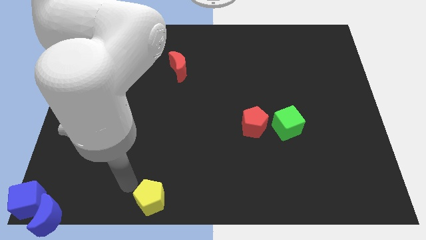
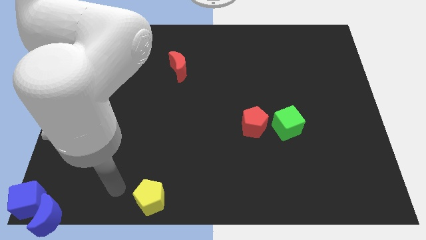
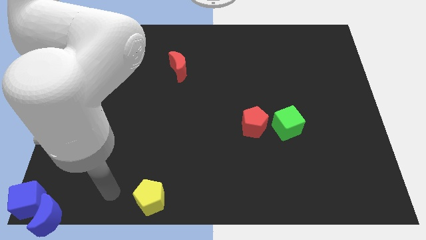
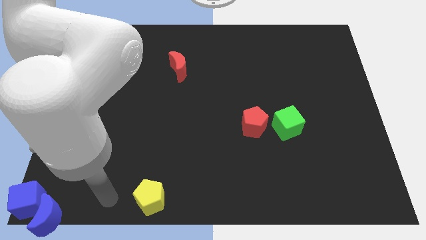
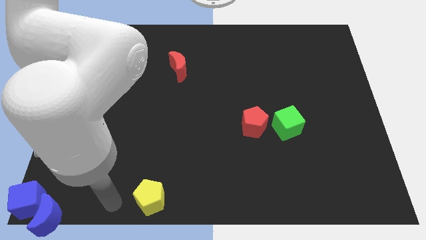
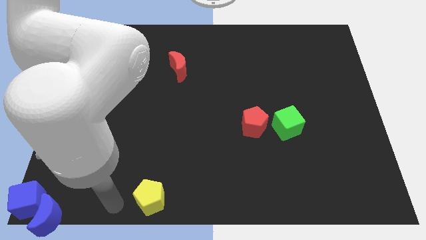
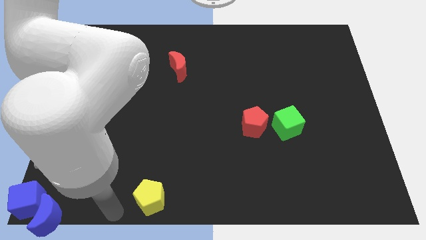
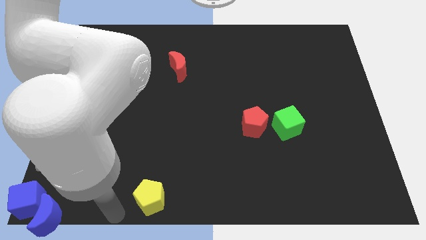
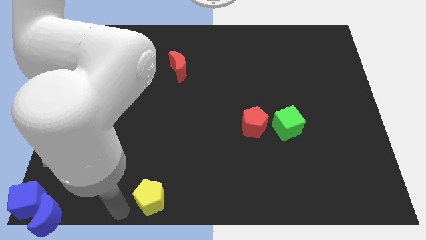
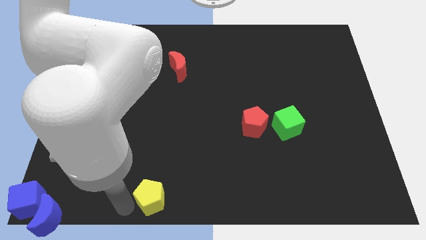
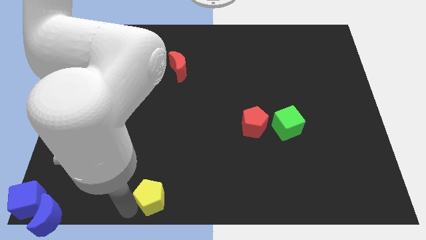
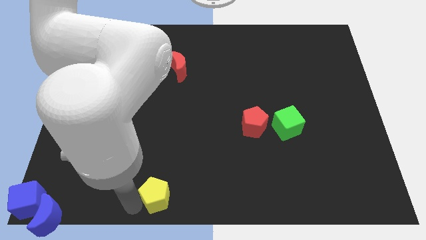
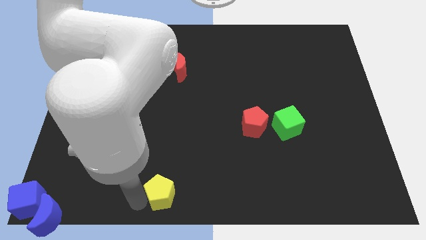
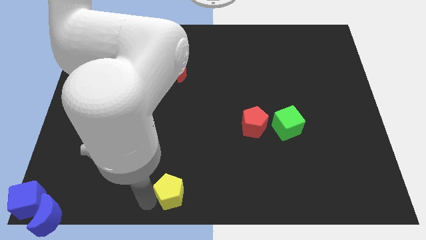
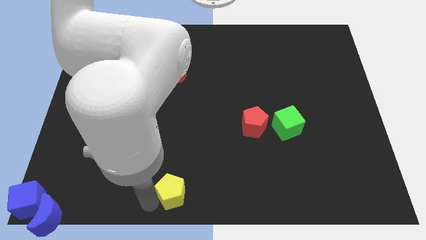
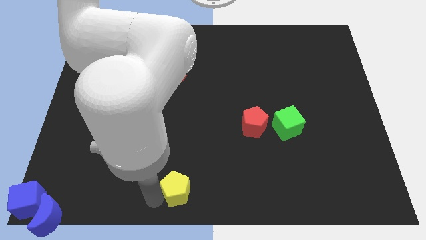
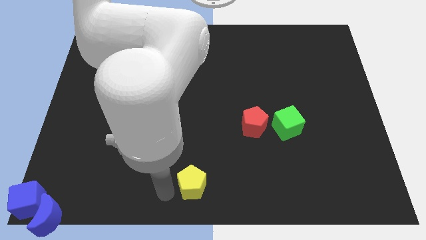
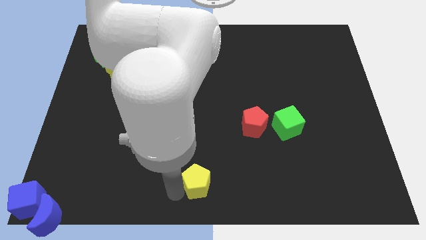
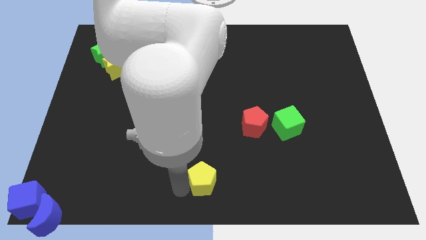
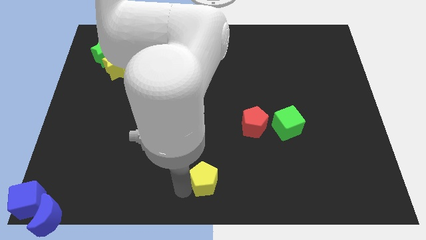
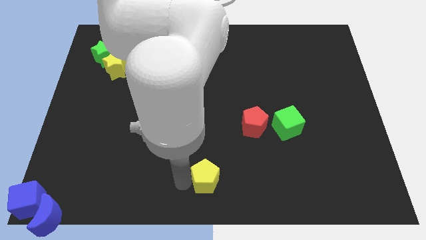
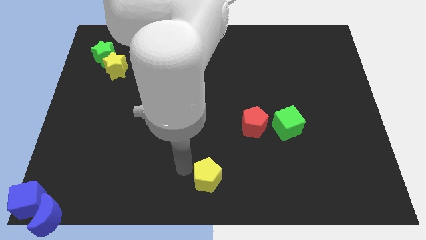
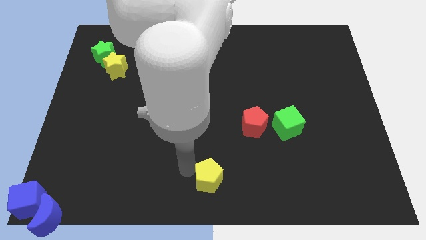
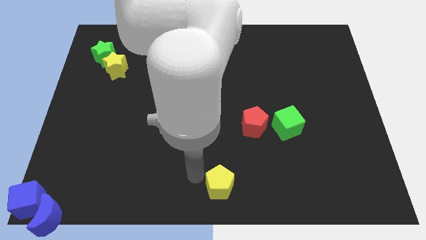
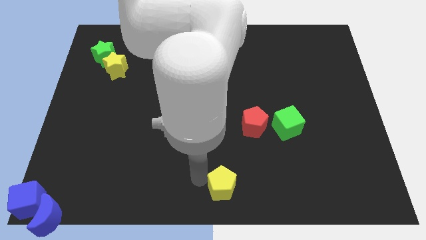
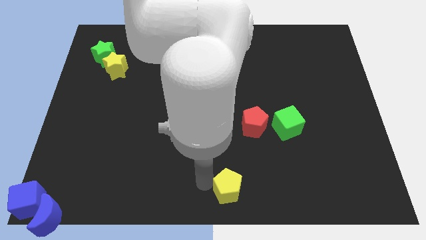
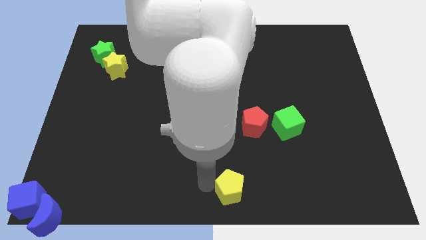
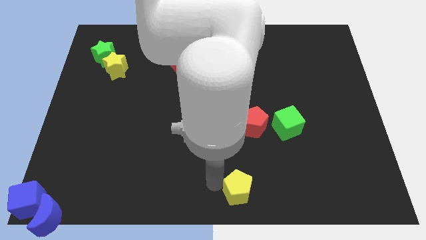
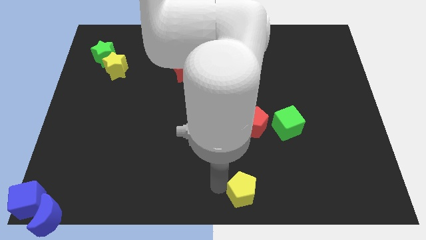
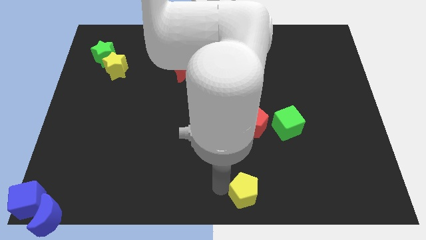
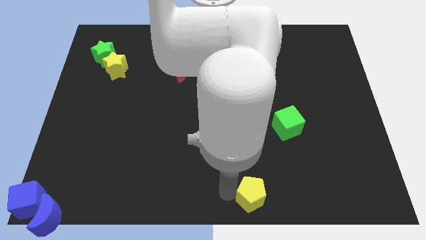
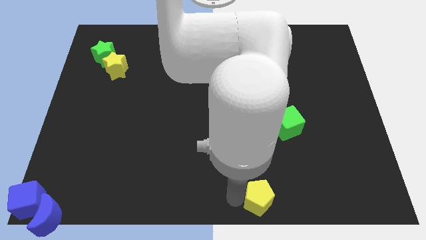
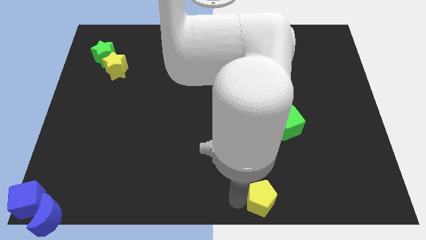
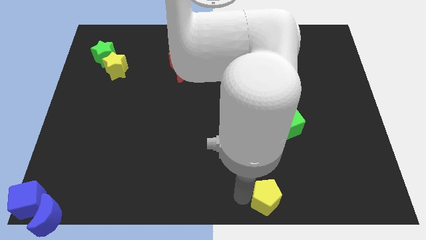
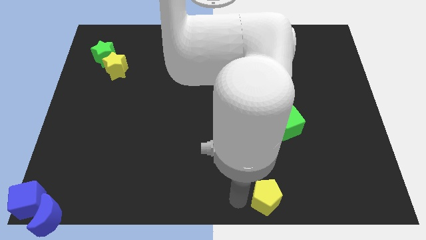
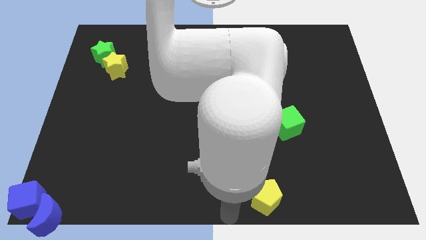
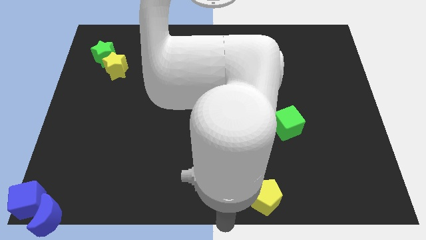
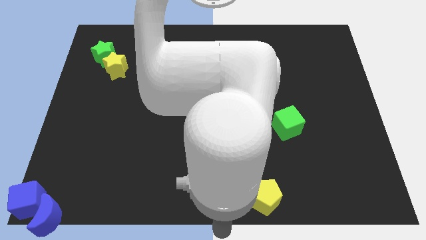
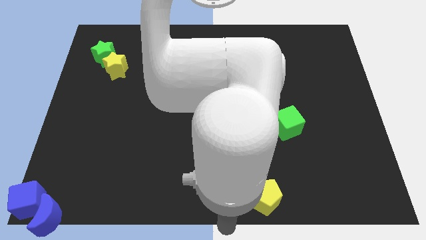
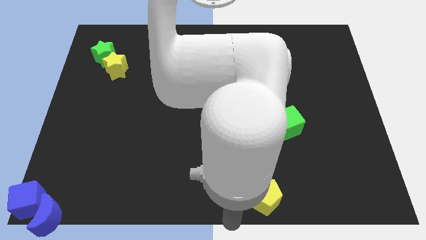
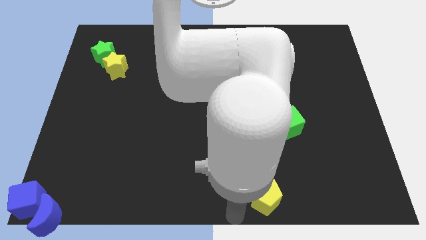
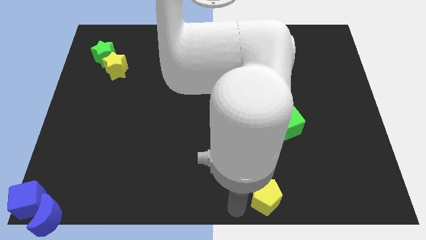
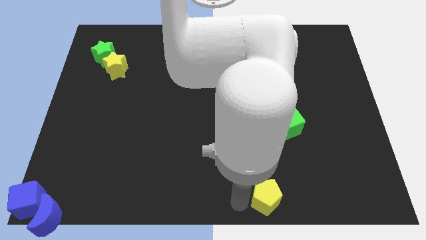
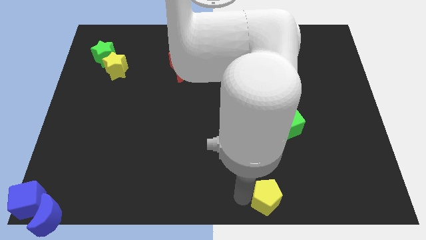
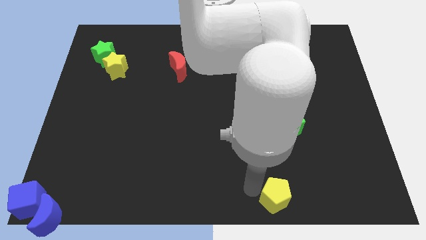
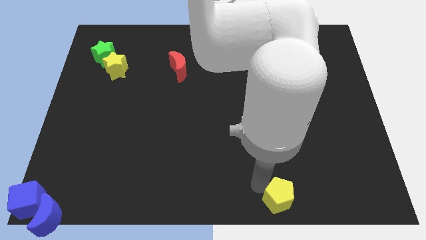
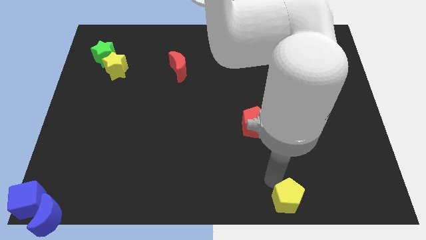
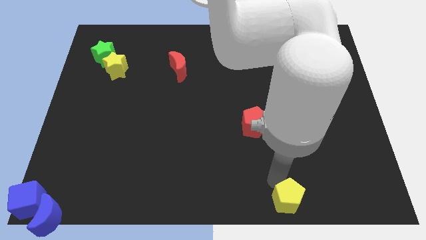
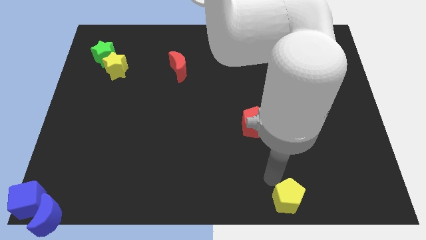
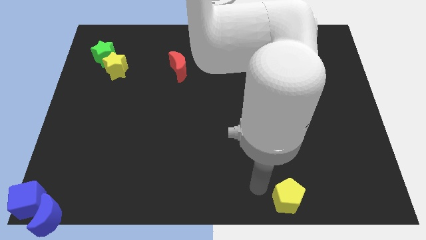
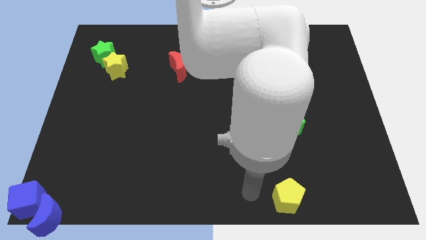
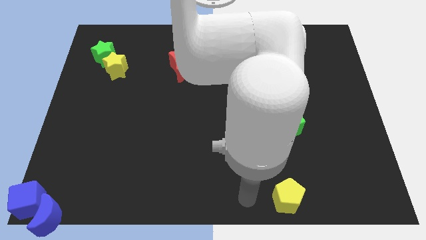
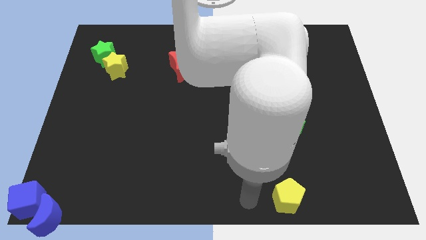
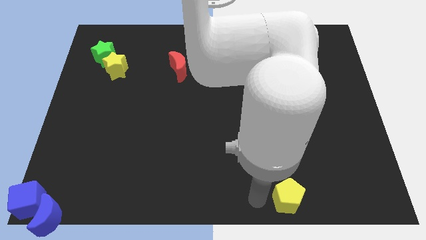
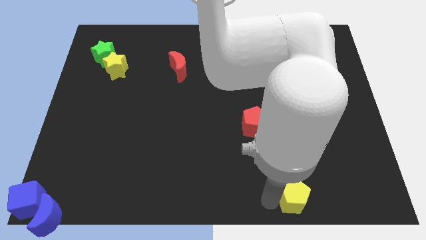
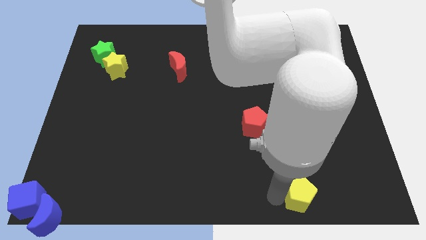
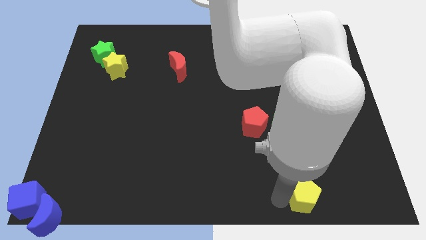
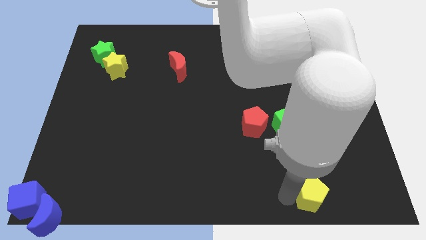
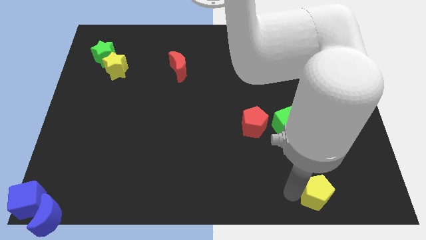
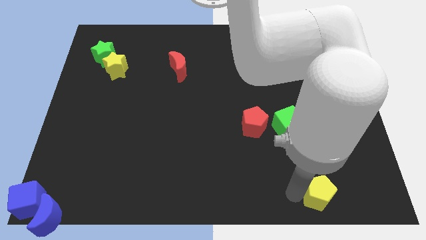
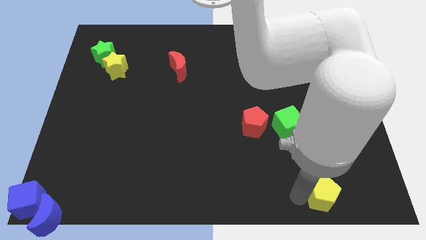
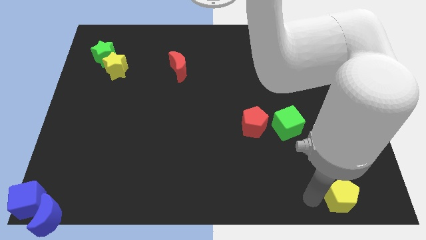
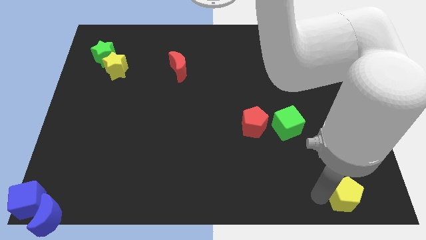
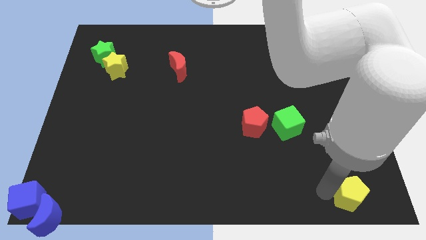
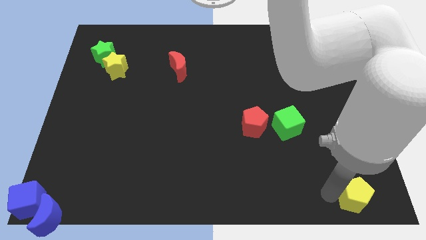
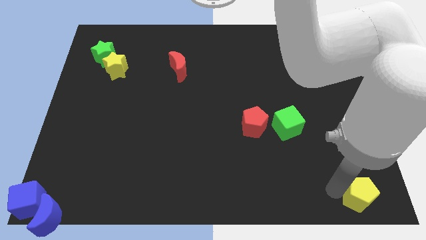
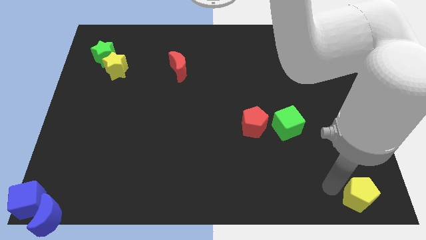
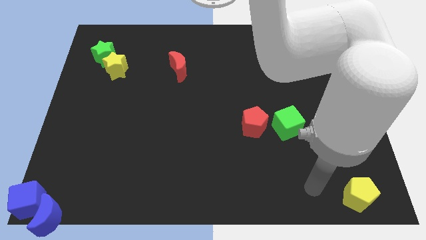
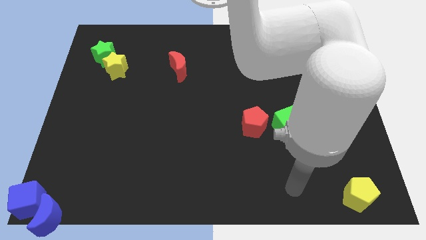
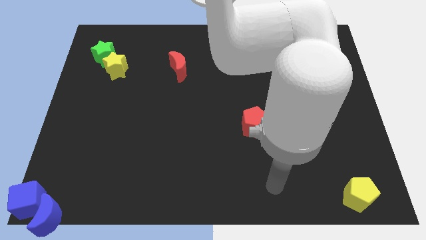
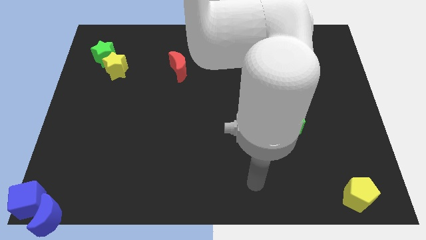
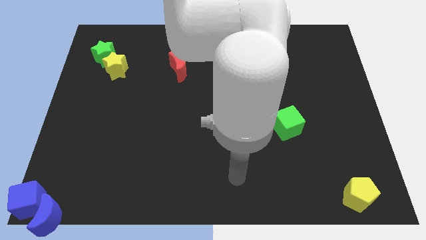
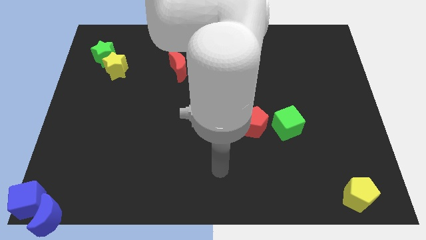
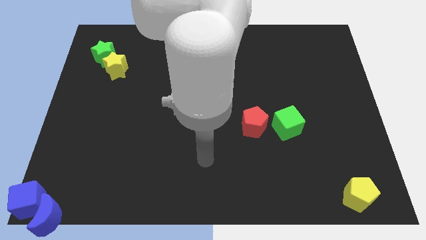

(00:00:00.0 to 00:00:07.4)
place the yellow pentagon at the bottom right corner of the board

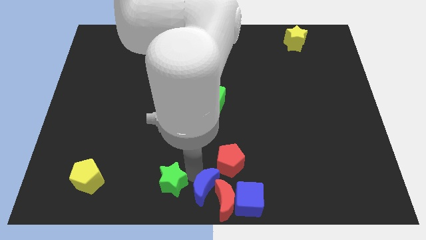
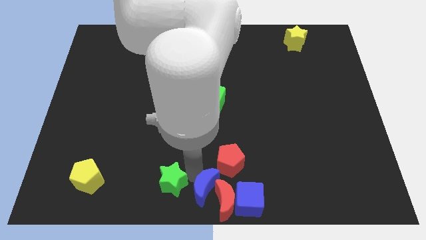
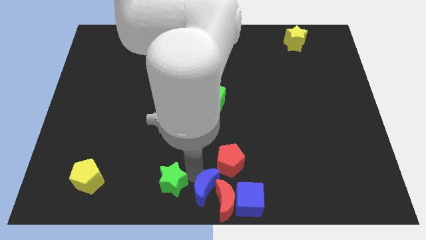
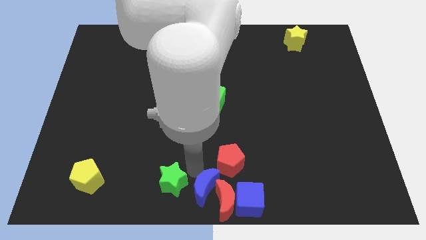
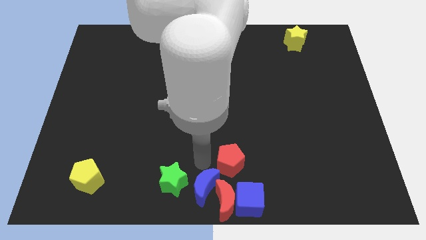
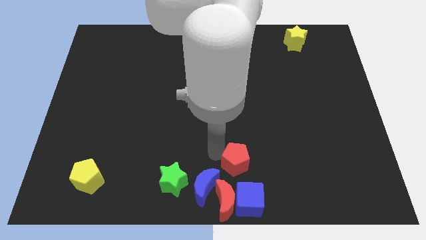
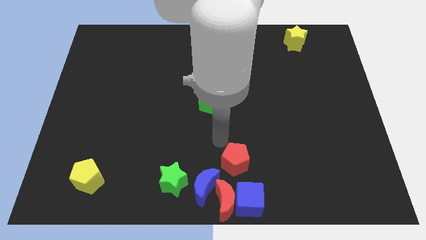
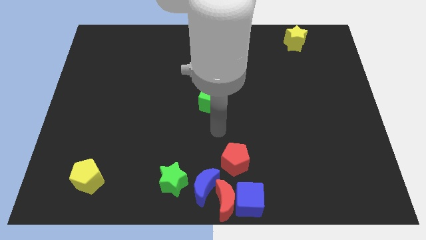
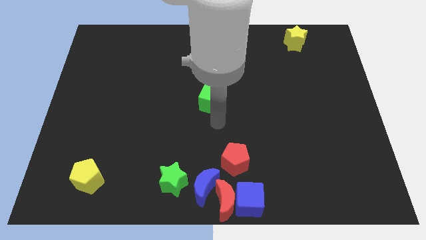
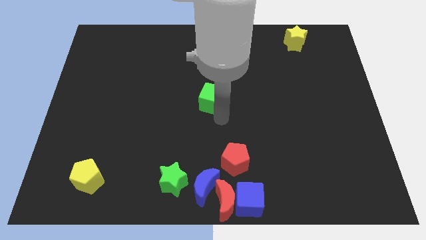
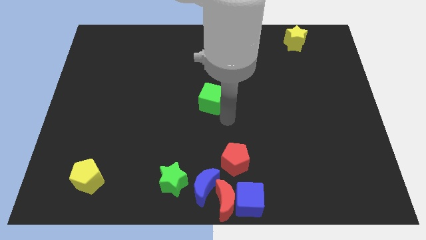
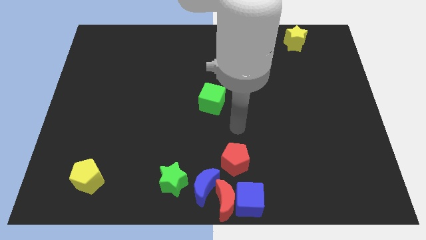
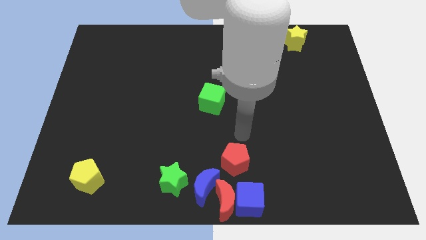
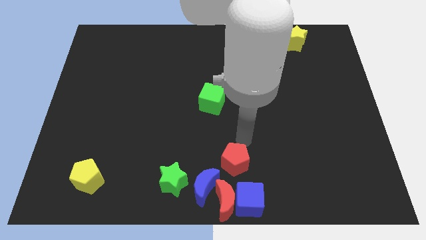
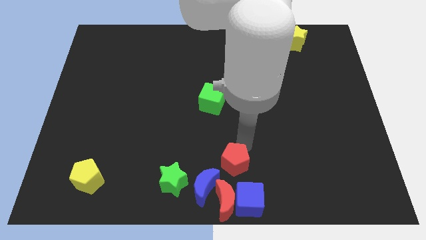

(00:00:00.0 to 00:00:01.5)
move your arm away from the blue moon
